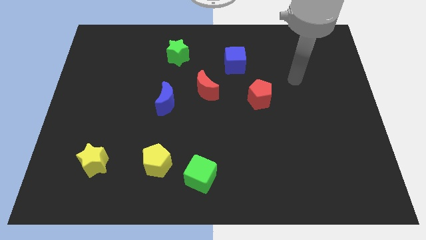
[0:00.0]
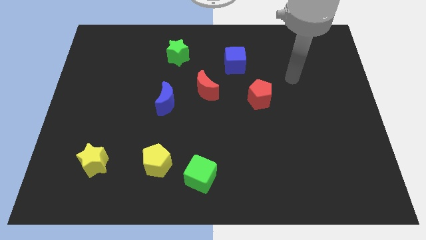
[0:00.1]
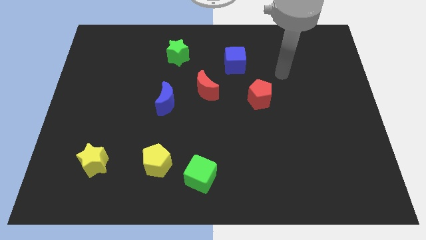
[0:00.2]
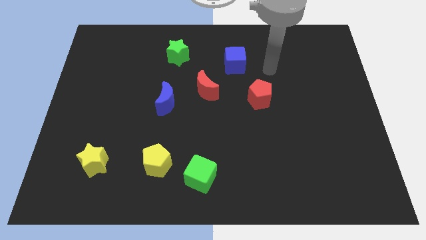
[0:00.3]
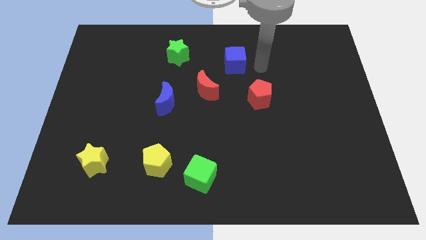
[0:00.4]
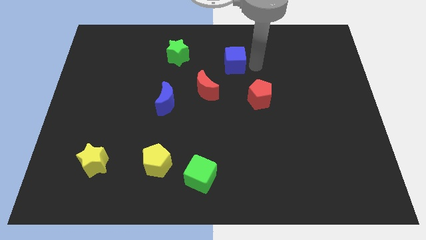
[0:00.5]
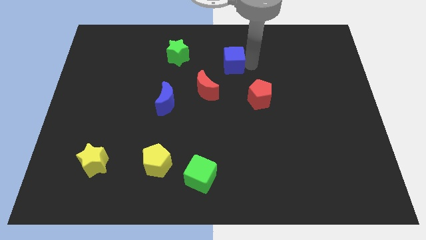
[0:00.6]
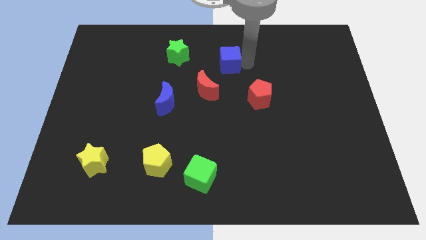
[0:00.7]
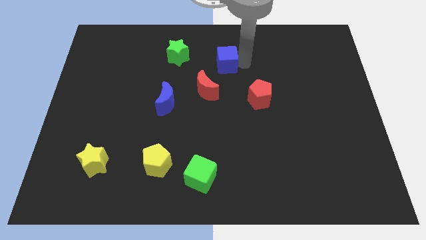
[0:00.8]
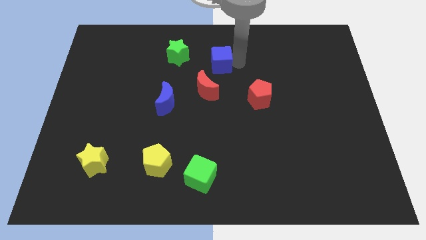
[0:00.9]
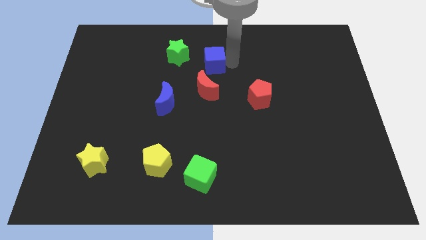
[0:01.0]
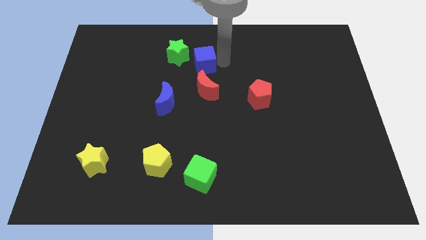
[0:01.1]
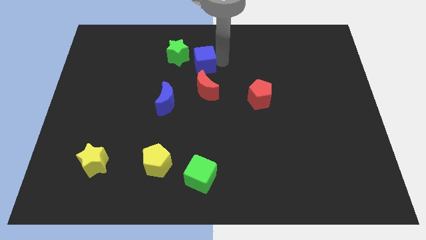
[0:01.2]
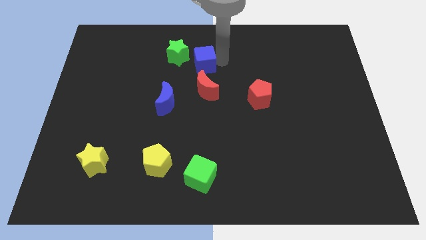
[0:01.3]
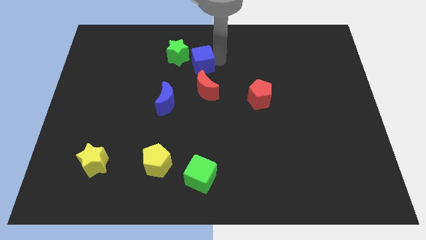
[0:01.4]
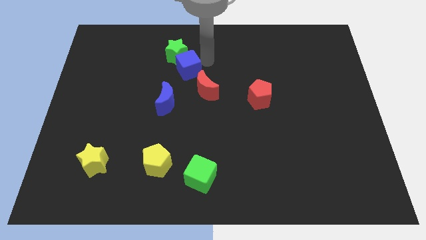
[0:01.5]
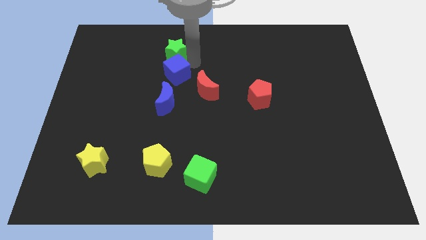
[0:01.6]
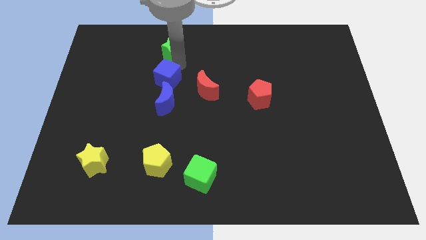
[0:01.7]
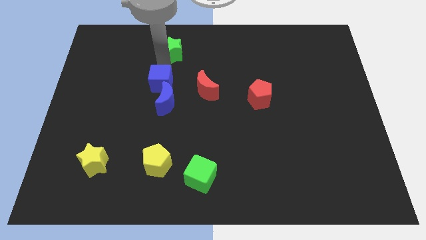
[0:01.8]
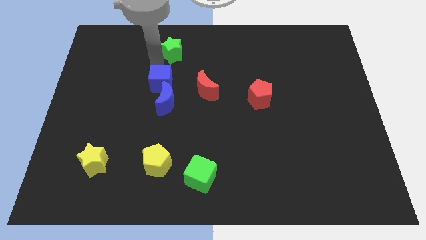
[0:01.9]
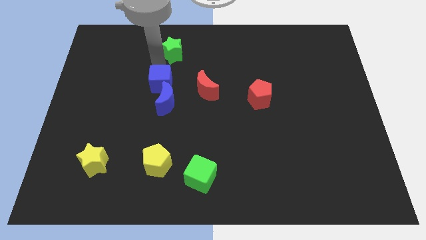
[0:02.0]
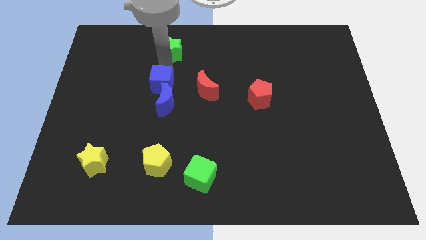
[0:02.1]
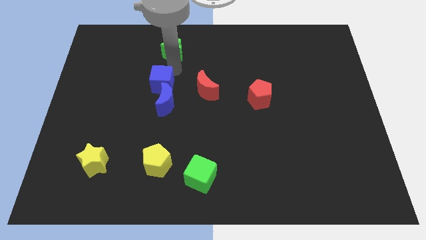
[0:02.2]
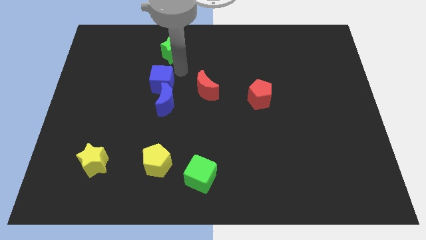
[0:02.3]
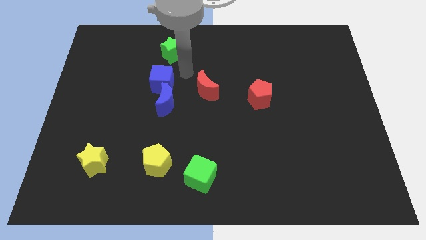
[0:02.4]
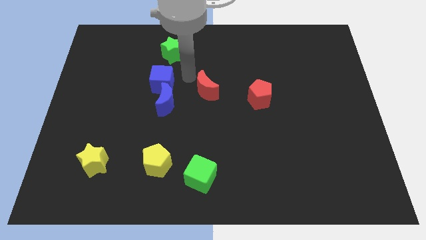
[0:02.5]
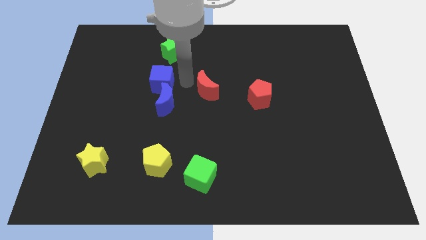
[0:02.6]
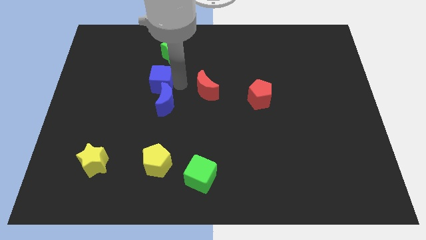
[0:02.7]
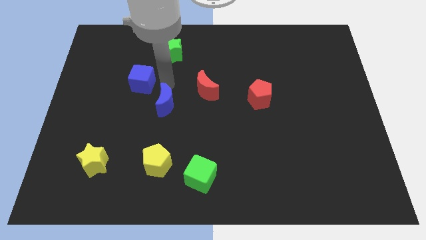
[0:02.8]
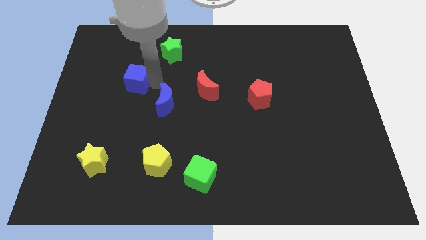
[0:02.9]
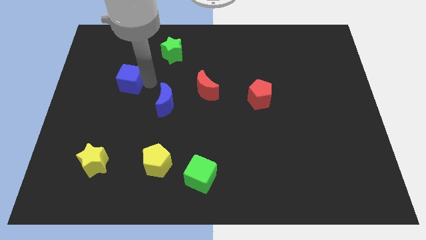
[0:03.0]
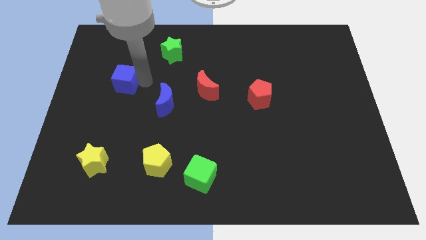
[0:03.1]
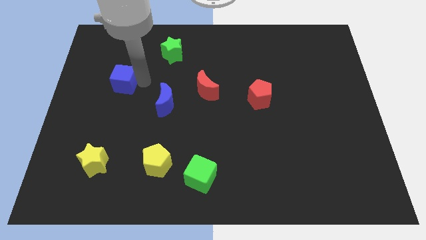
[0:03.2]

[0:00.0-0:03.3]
move blue cube towards center left

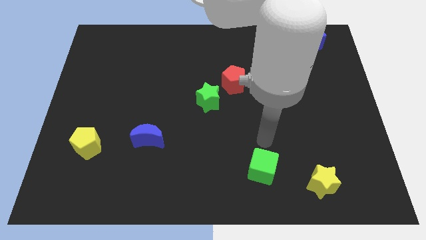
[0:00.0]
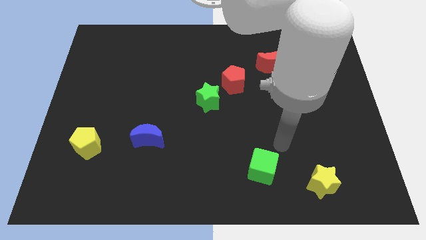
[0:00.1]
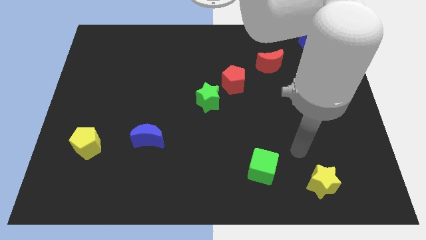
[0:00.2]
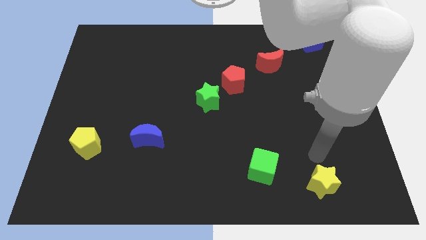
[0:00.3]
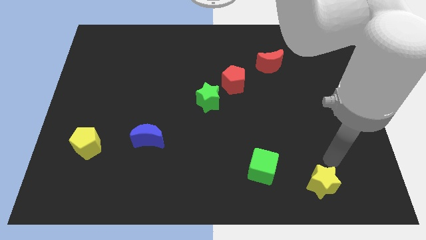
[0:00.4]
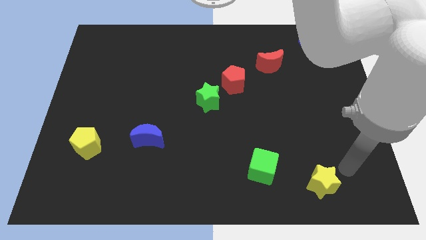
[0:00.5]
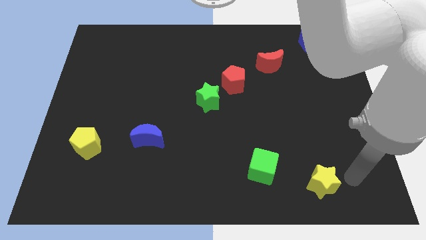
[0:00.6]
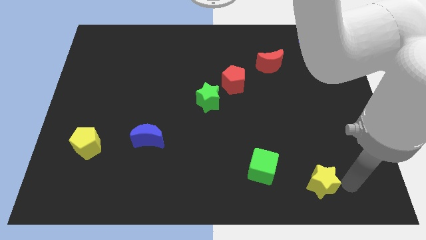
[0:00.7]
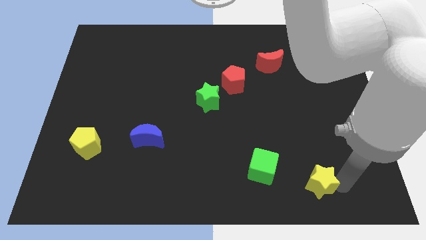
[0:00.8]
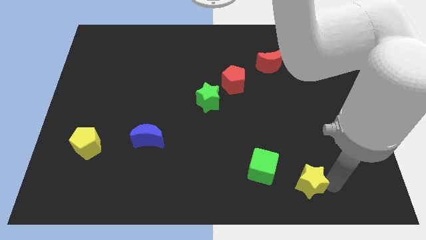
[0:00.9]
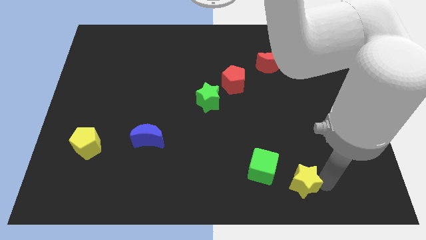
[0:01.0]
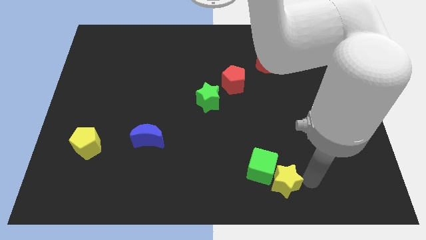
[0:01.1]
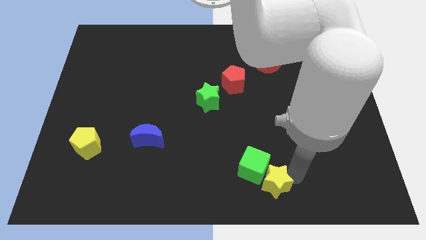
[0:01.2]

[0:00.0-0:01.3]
slide the yellow star into the green cube

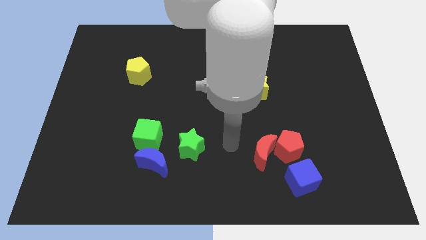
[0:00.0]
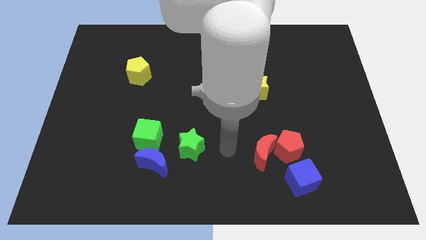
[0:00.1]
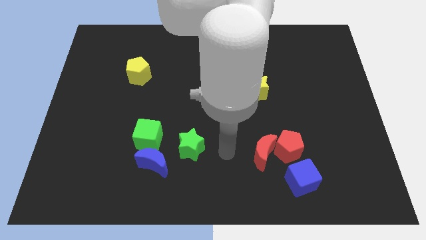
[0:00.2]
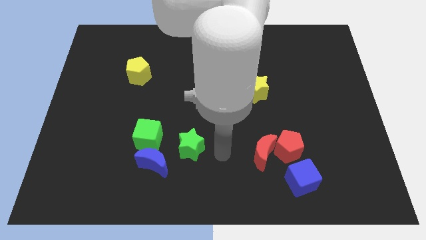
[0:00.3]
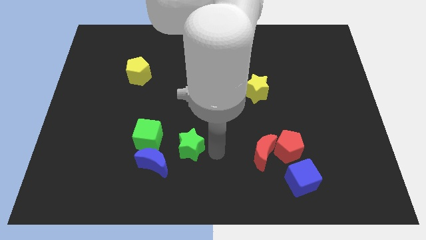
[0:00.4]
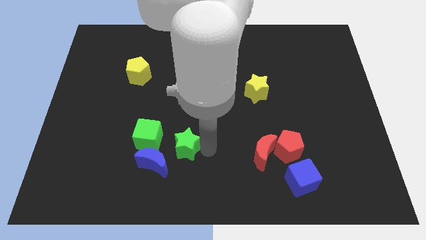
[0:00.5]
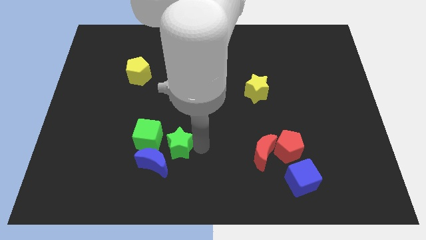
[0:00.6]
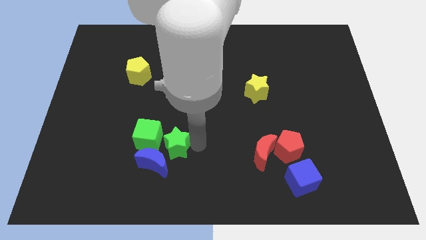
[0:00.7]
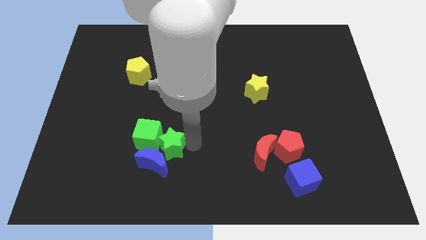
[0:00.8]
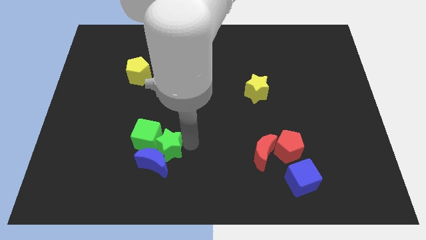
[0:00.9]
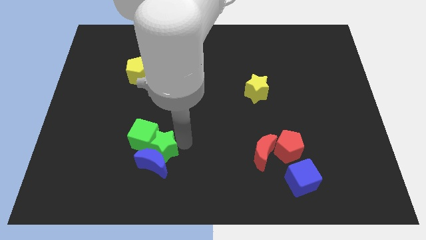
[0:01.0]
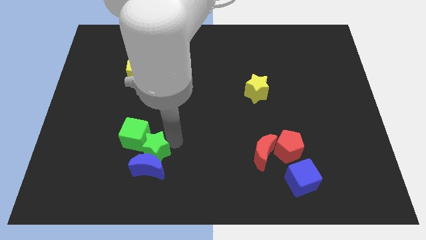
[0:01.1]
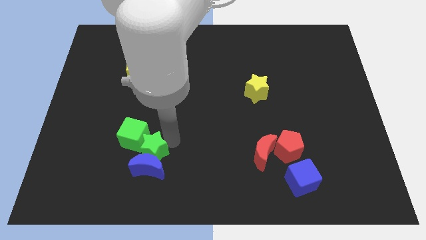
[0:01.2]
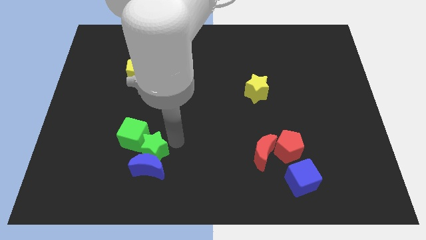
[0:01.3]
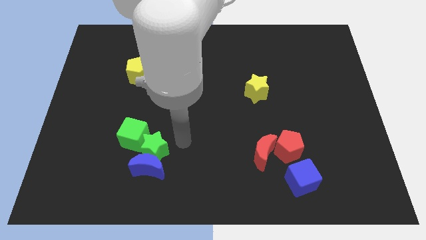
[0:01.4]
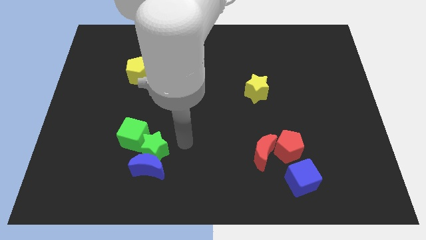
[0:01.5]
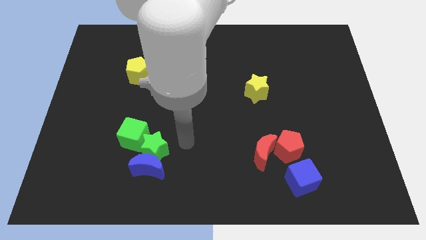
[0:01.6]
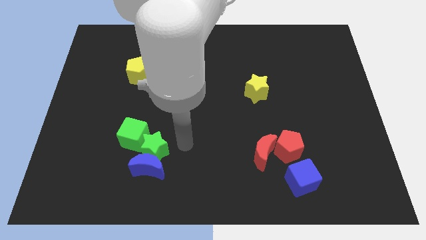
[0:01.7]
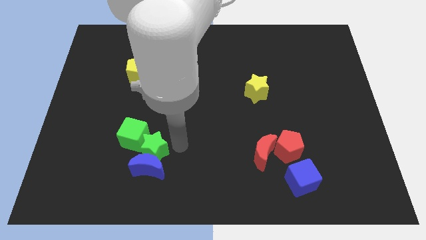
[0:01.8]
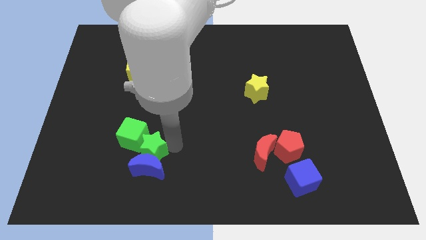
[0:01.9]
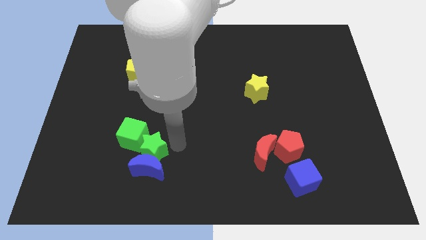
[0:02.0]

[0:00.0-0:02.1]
push green star into green cube and blue moon

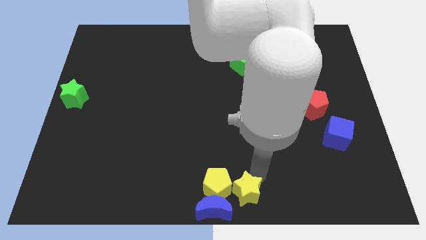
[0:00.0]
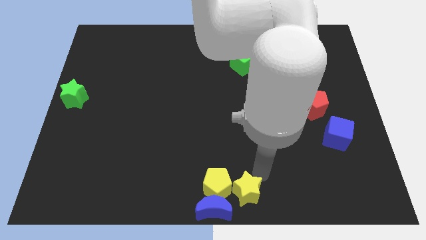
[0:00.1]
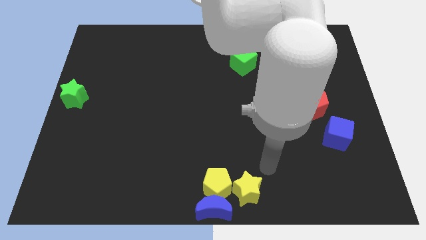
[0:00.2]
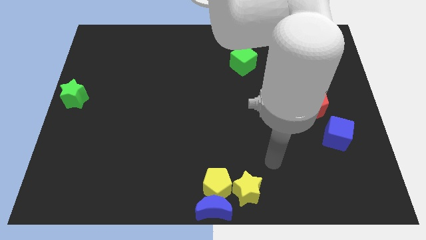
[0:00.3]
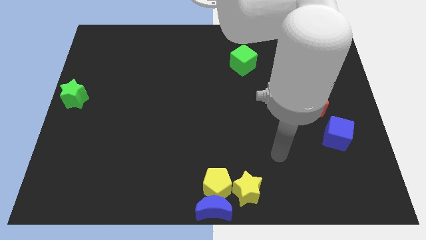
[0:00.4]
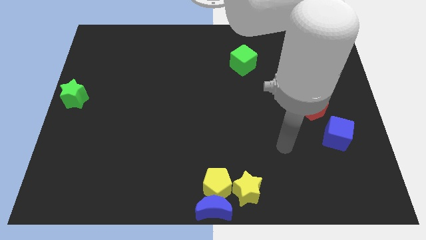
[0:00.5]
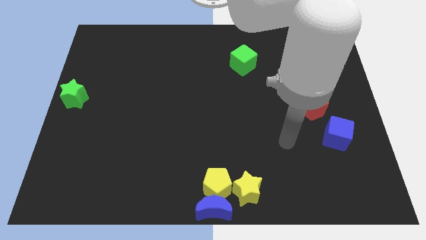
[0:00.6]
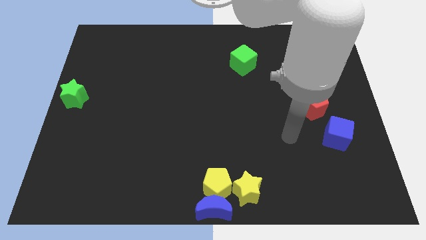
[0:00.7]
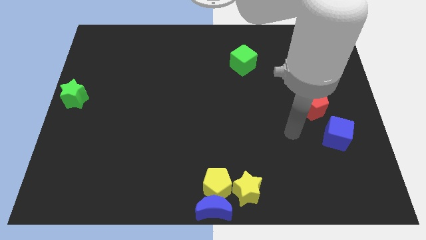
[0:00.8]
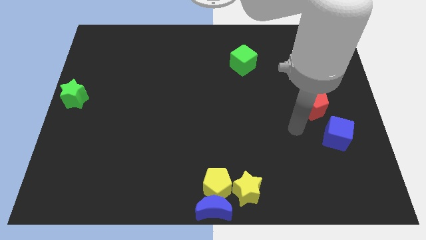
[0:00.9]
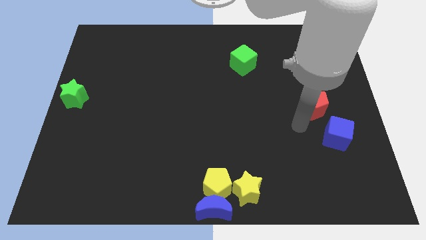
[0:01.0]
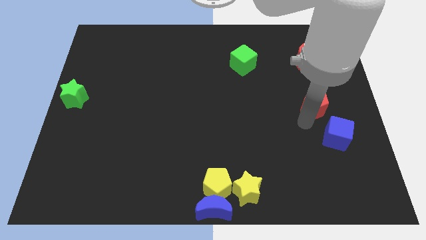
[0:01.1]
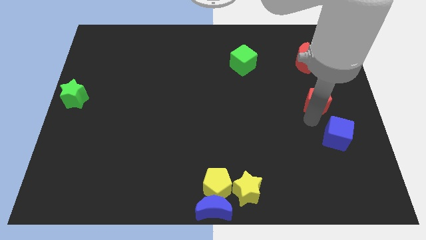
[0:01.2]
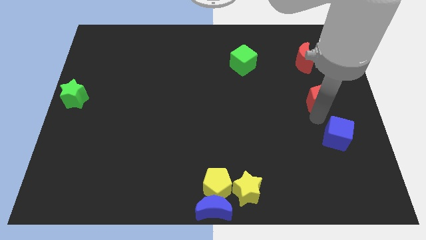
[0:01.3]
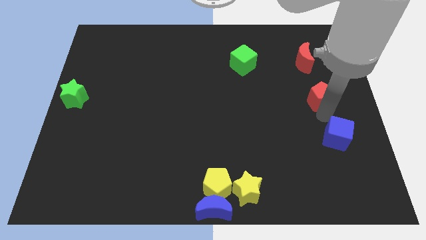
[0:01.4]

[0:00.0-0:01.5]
touch the red pentagon

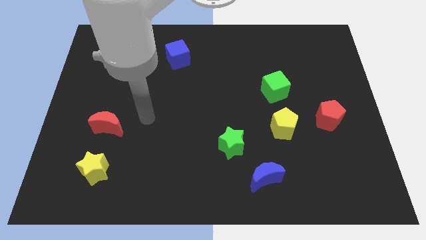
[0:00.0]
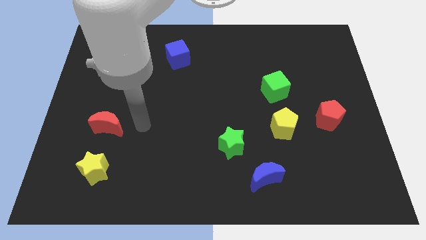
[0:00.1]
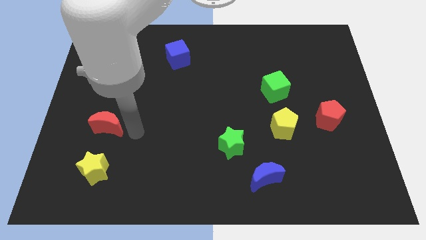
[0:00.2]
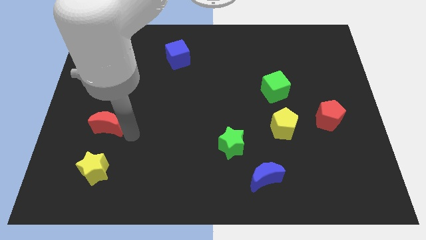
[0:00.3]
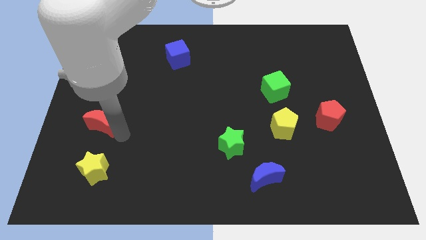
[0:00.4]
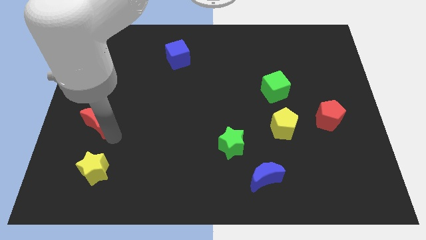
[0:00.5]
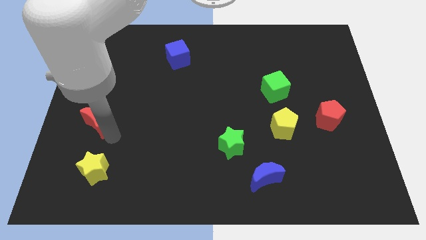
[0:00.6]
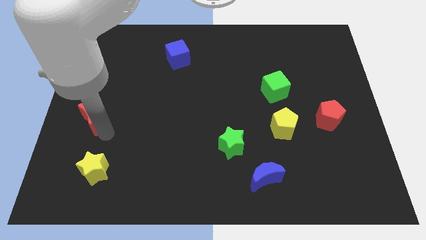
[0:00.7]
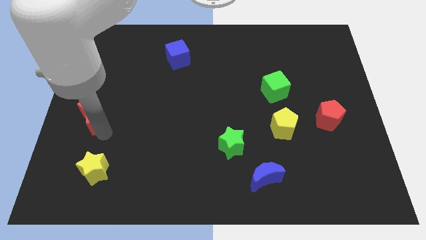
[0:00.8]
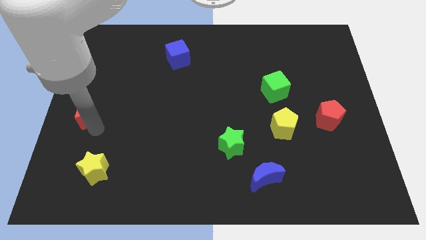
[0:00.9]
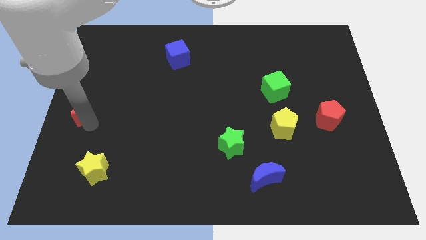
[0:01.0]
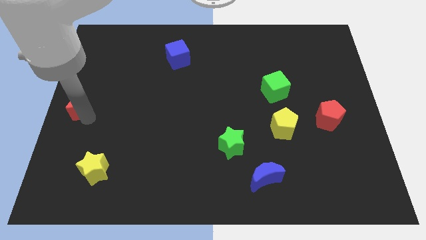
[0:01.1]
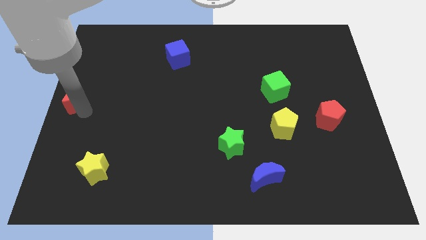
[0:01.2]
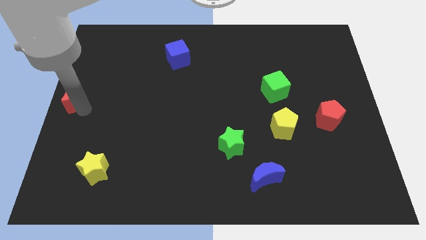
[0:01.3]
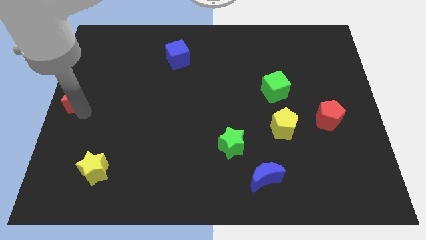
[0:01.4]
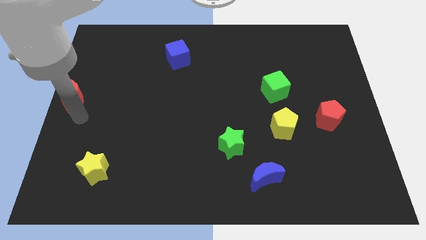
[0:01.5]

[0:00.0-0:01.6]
push the red moon to the left center
